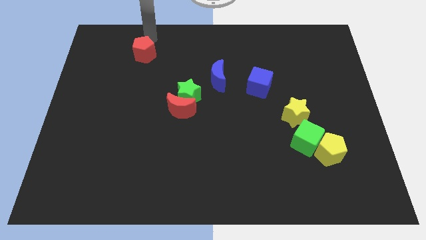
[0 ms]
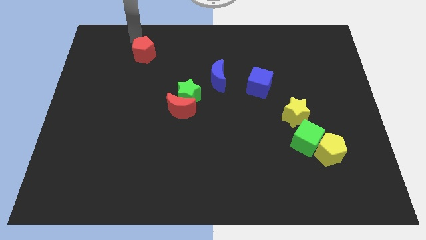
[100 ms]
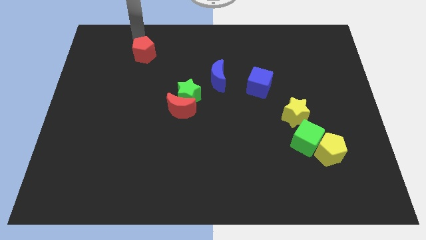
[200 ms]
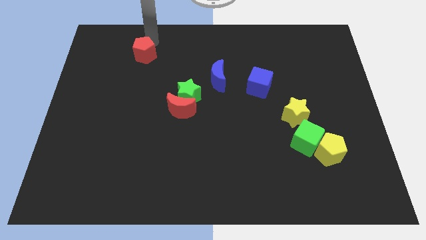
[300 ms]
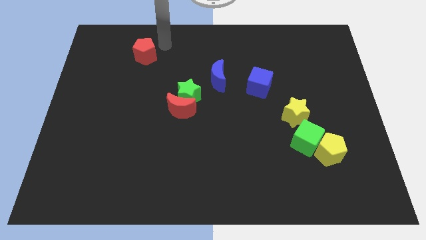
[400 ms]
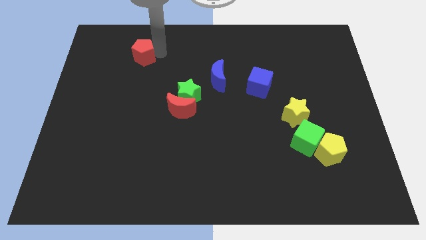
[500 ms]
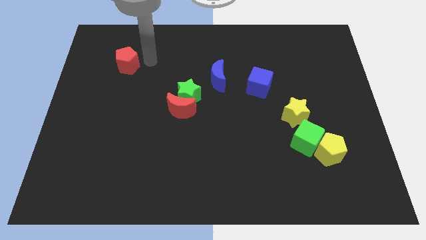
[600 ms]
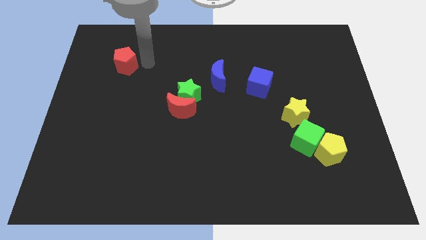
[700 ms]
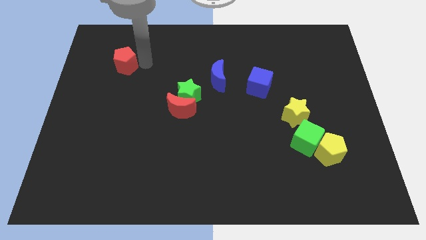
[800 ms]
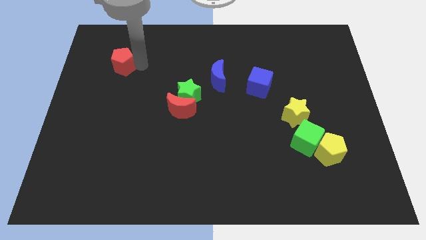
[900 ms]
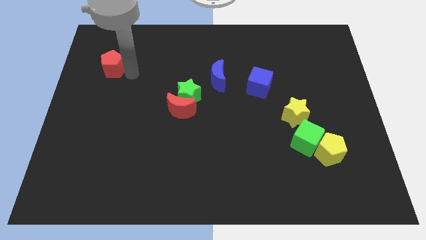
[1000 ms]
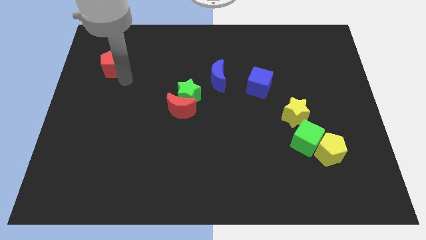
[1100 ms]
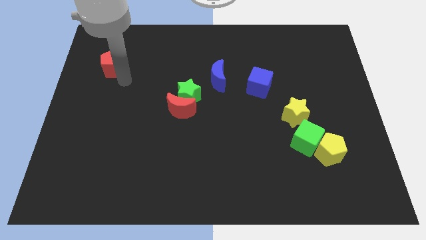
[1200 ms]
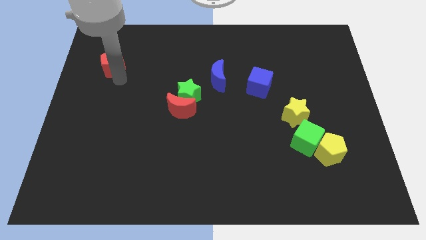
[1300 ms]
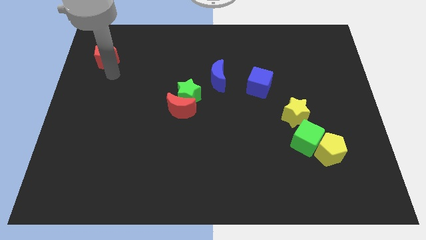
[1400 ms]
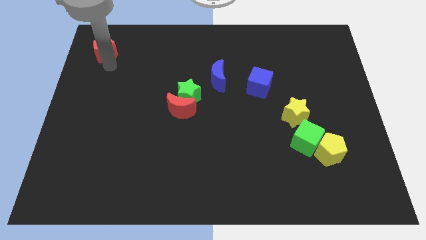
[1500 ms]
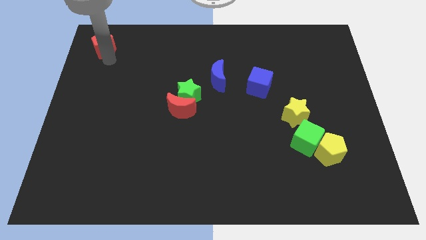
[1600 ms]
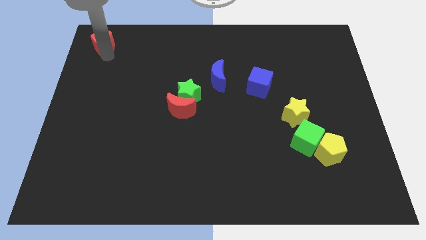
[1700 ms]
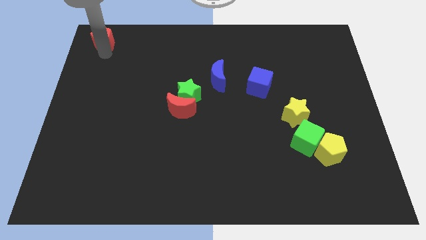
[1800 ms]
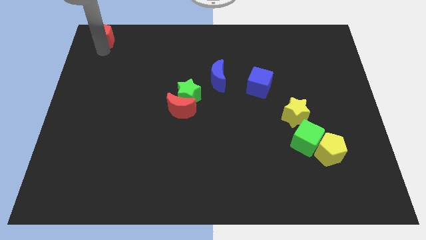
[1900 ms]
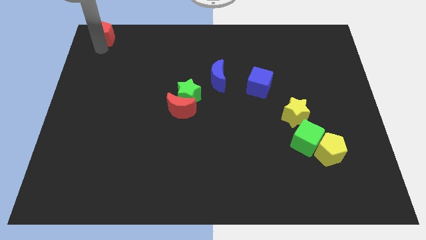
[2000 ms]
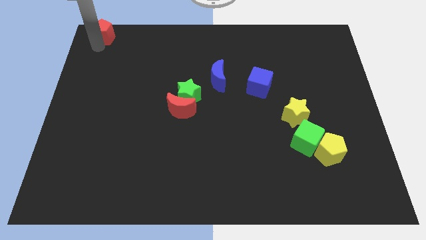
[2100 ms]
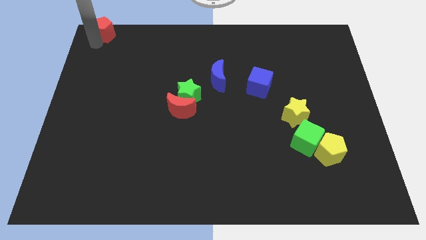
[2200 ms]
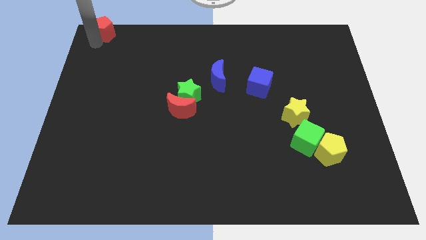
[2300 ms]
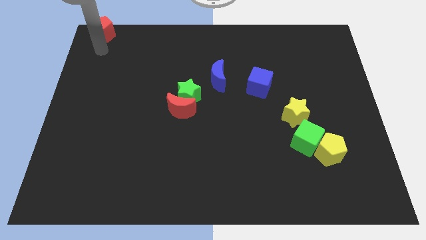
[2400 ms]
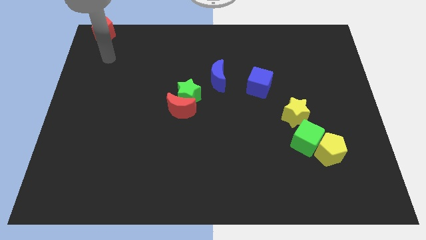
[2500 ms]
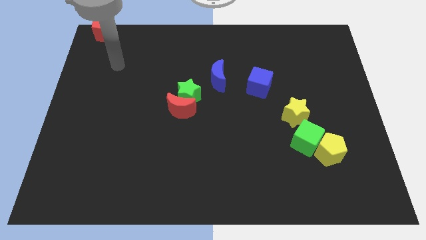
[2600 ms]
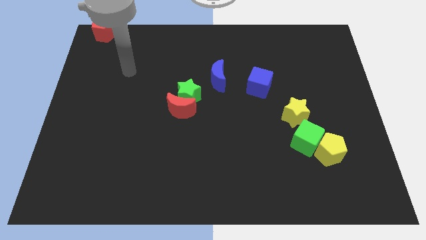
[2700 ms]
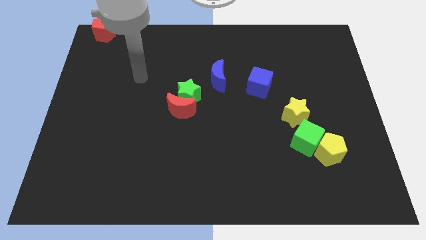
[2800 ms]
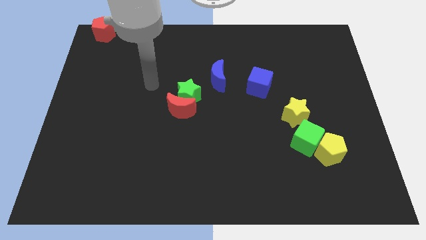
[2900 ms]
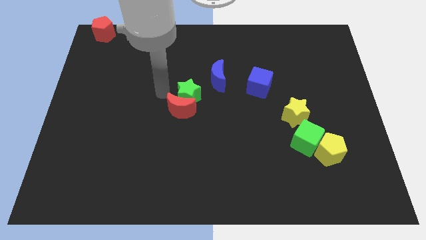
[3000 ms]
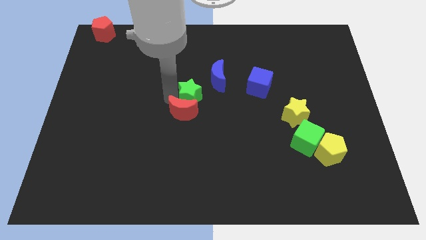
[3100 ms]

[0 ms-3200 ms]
put the red pentagon to the top left corner of the board

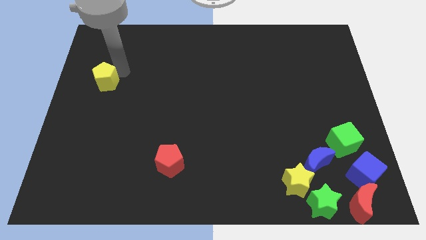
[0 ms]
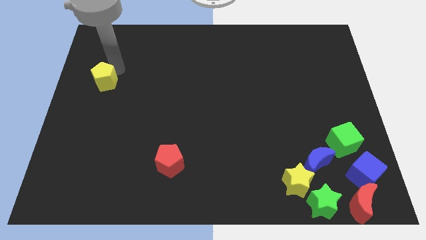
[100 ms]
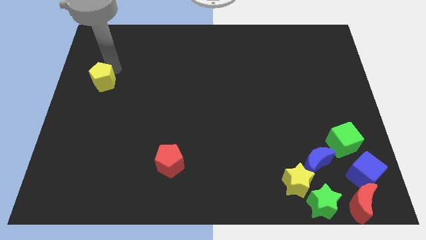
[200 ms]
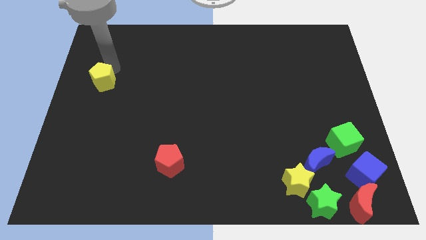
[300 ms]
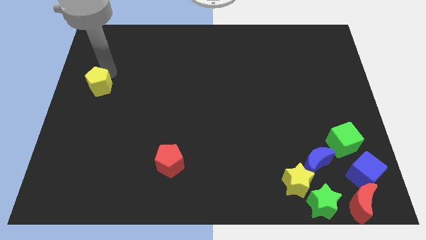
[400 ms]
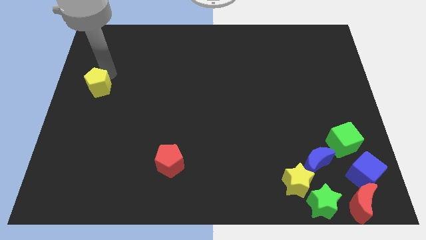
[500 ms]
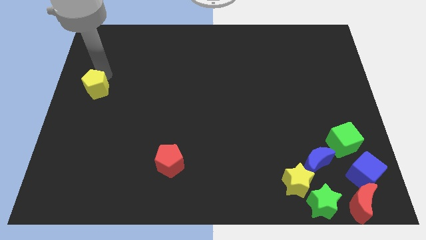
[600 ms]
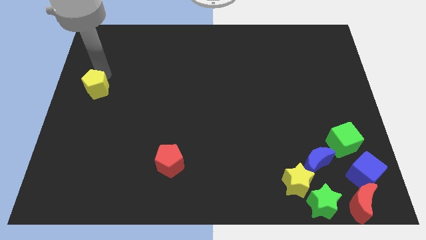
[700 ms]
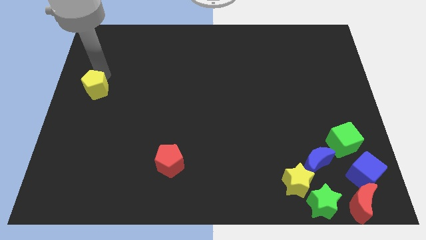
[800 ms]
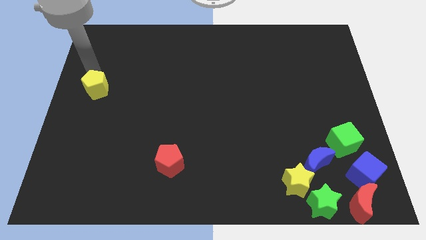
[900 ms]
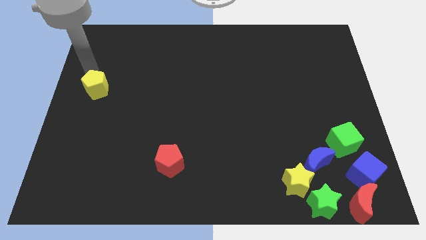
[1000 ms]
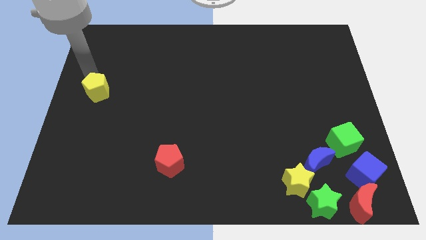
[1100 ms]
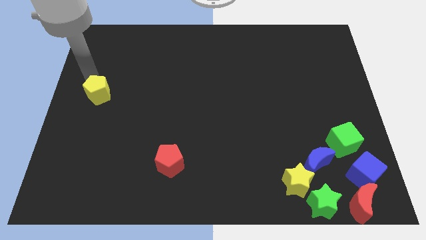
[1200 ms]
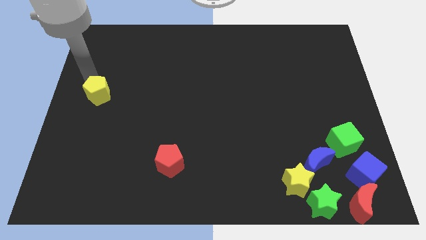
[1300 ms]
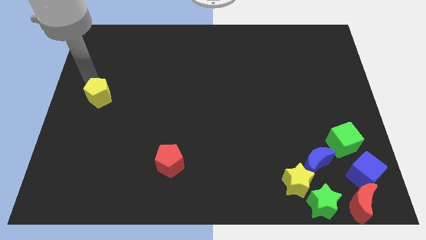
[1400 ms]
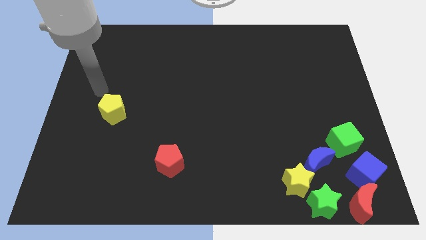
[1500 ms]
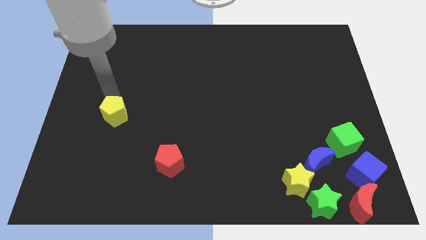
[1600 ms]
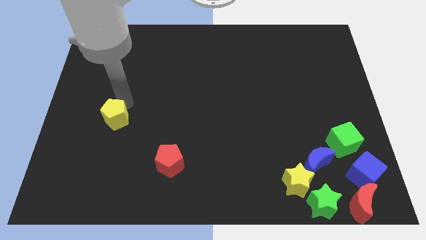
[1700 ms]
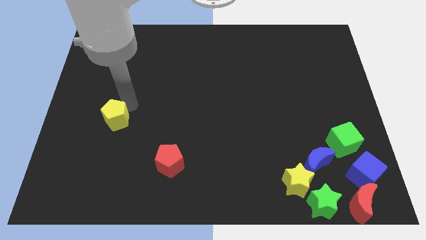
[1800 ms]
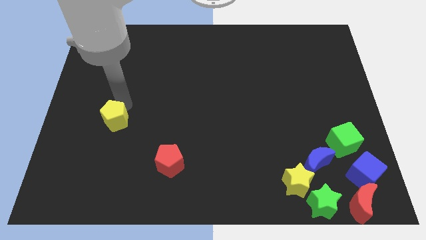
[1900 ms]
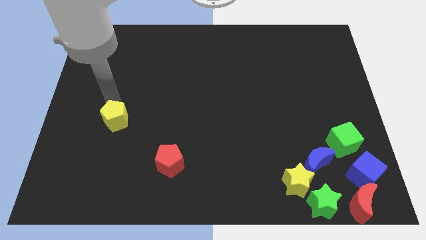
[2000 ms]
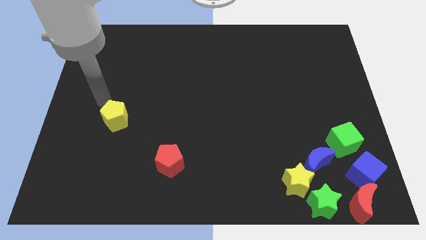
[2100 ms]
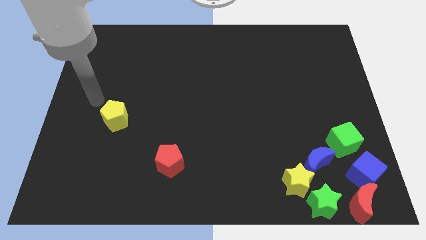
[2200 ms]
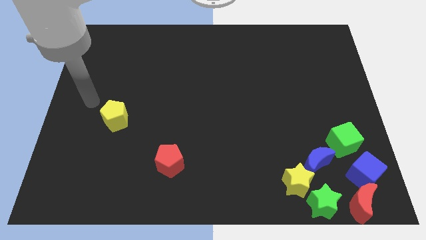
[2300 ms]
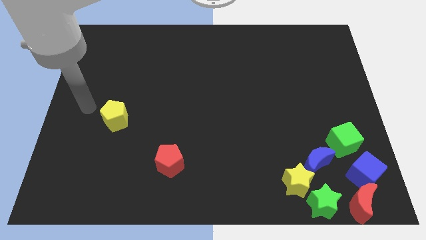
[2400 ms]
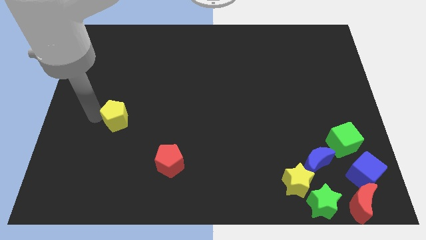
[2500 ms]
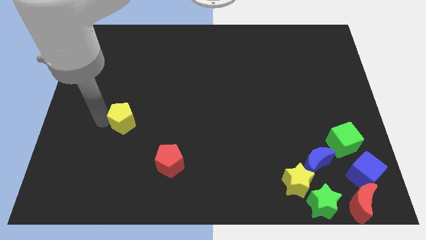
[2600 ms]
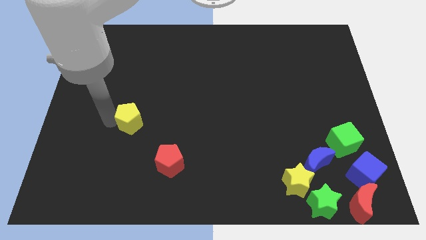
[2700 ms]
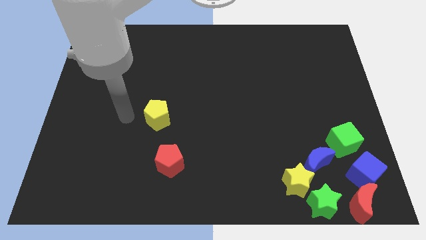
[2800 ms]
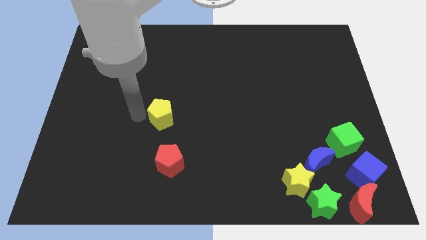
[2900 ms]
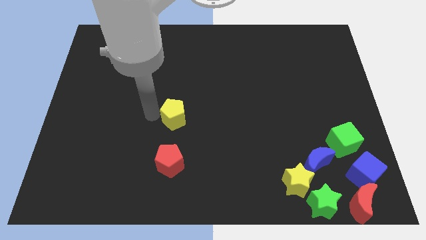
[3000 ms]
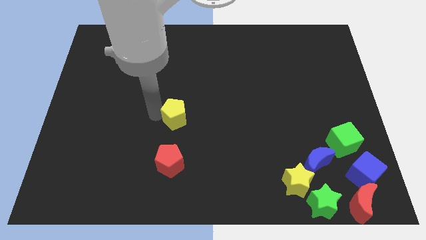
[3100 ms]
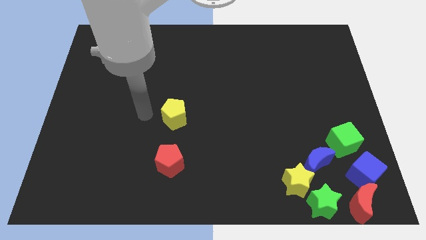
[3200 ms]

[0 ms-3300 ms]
push the yellow pentagon to the top of red pentagon

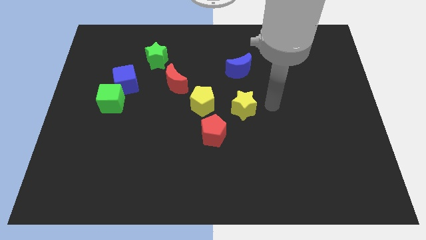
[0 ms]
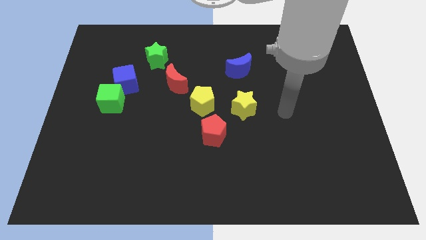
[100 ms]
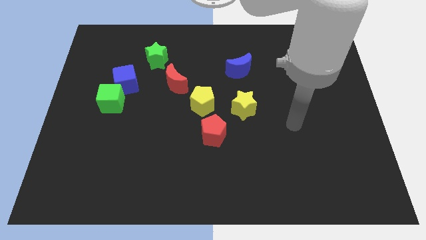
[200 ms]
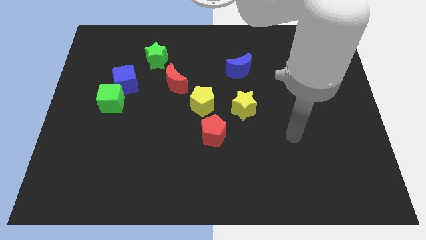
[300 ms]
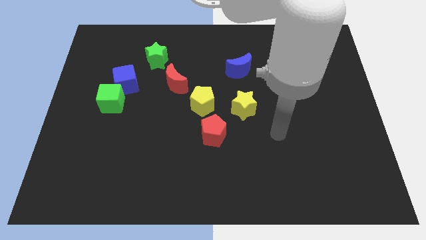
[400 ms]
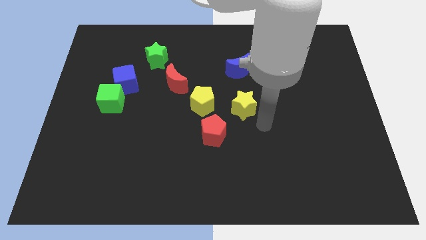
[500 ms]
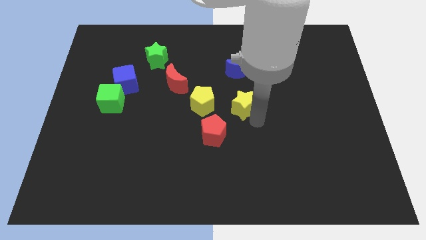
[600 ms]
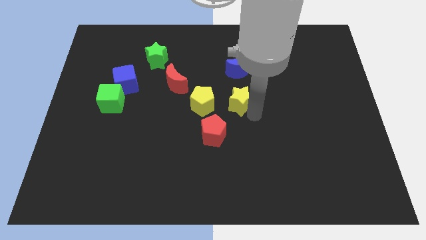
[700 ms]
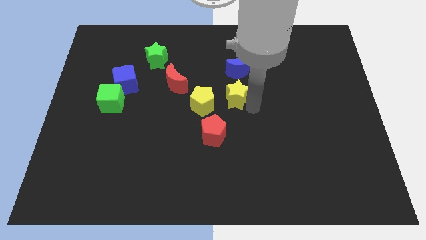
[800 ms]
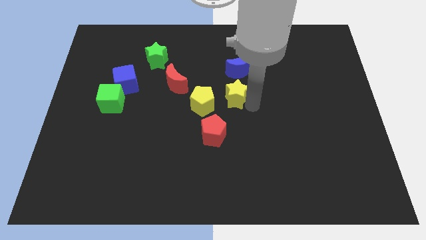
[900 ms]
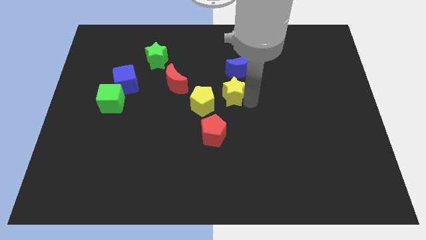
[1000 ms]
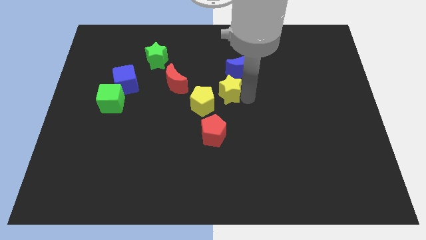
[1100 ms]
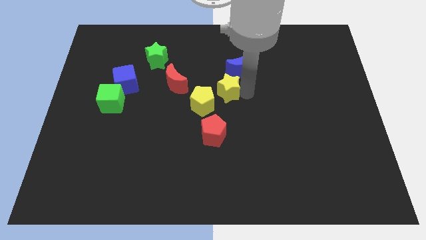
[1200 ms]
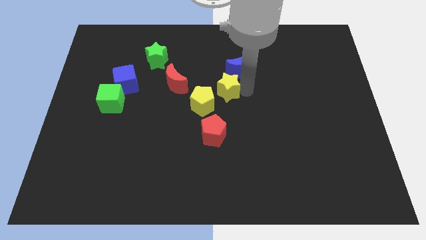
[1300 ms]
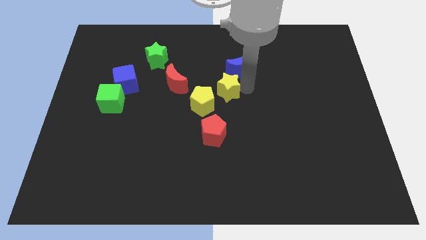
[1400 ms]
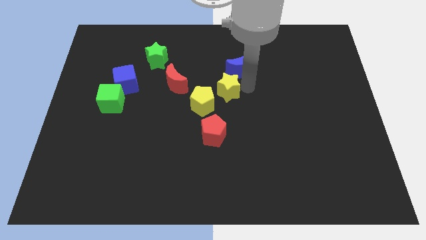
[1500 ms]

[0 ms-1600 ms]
put the yellow star below the blue moon

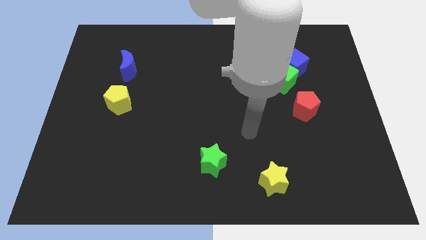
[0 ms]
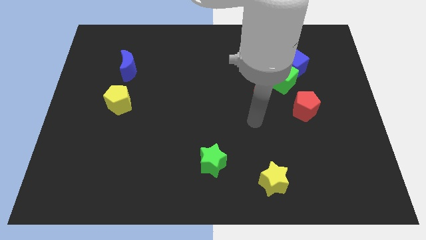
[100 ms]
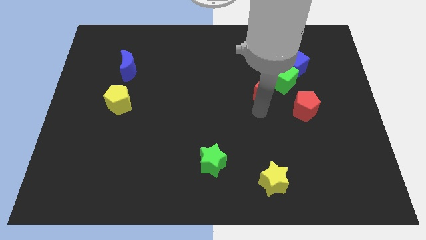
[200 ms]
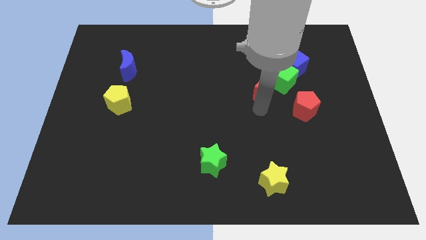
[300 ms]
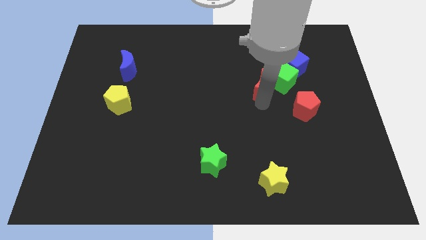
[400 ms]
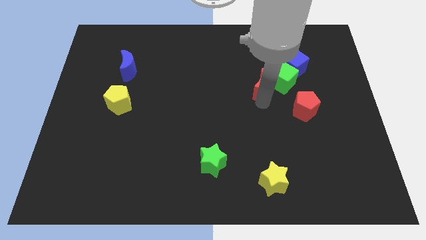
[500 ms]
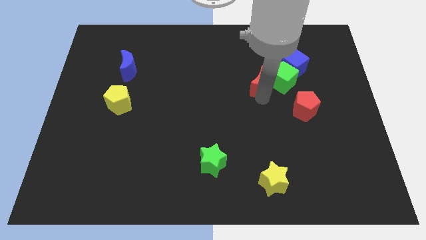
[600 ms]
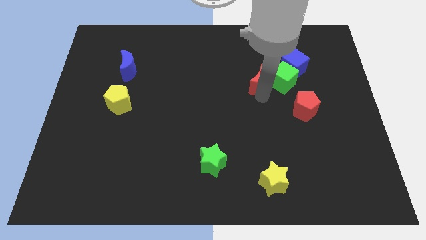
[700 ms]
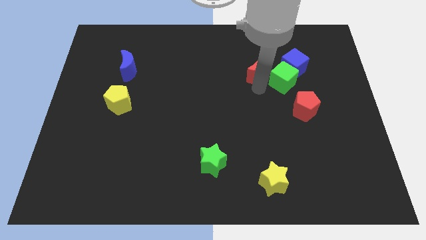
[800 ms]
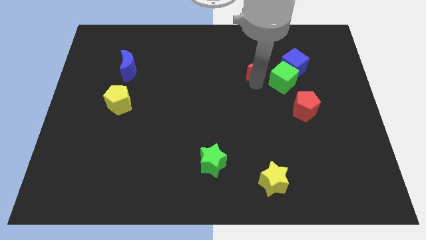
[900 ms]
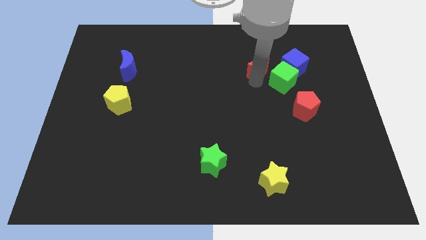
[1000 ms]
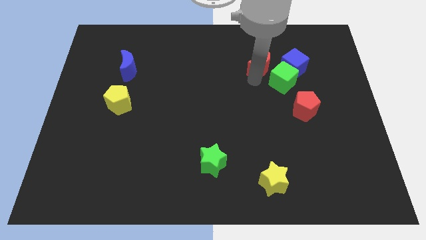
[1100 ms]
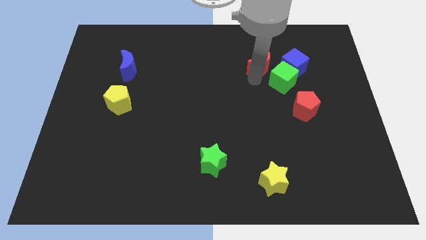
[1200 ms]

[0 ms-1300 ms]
place the red moon to the left side of the blue cube
